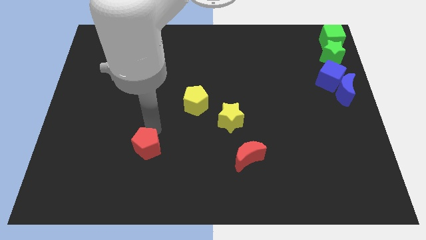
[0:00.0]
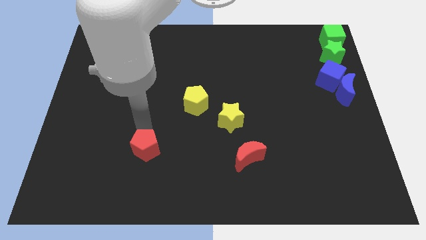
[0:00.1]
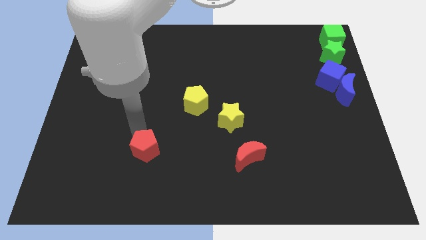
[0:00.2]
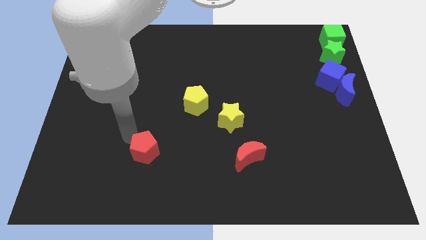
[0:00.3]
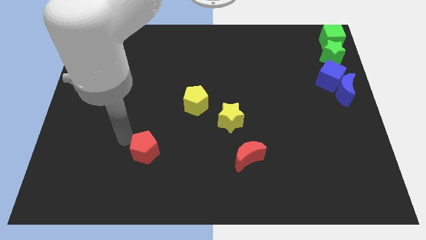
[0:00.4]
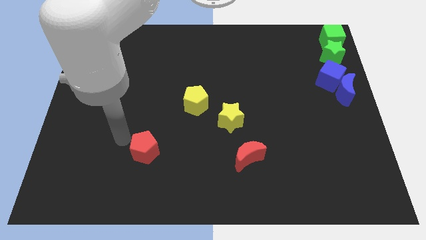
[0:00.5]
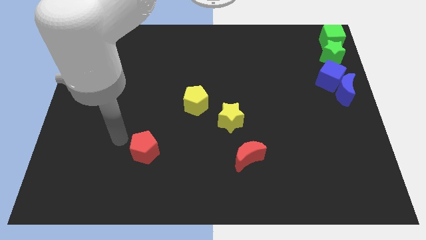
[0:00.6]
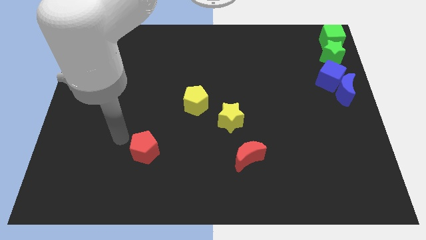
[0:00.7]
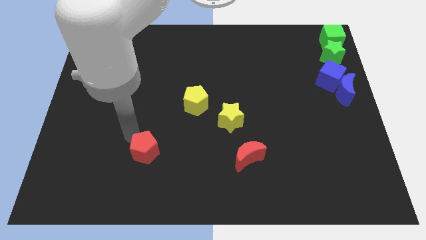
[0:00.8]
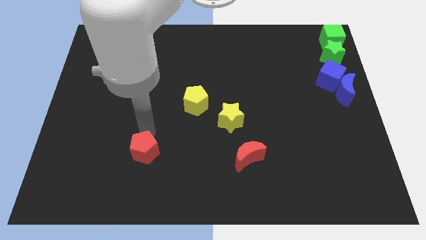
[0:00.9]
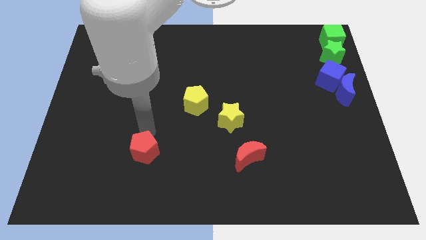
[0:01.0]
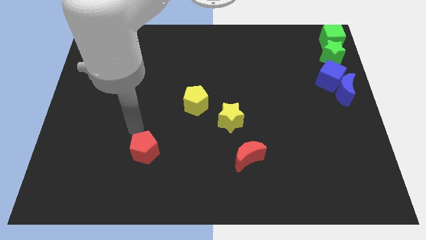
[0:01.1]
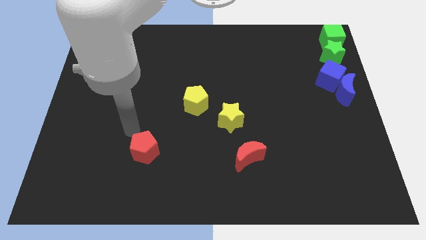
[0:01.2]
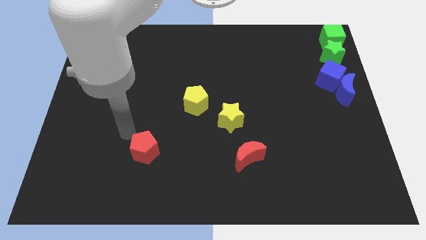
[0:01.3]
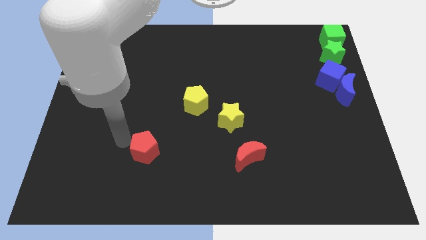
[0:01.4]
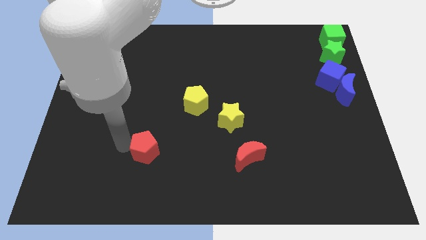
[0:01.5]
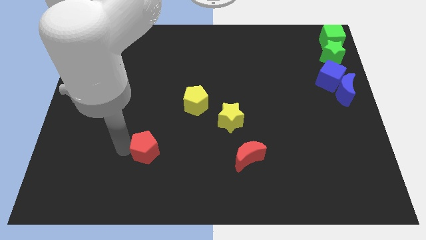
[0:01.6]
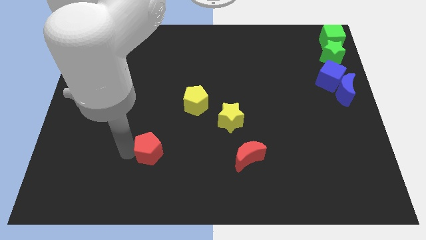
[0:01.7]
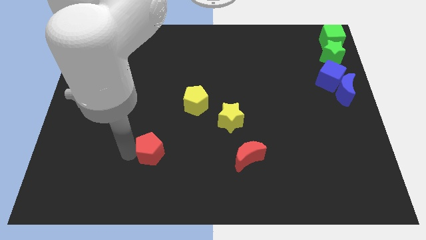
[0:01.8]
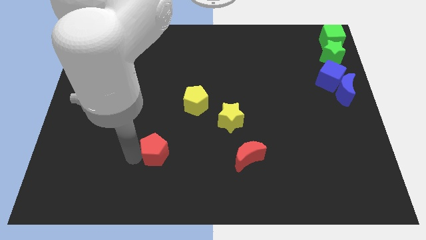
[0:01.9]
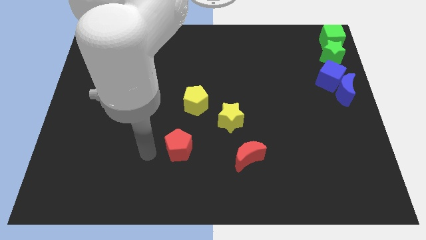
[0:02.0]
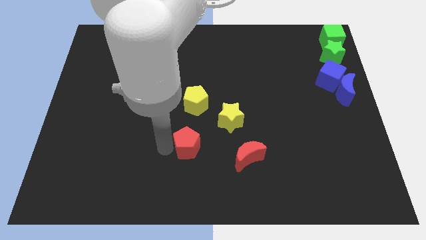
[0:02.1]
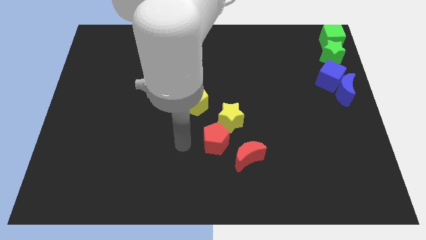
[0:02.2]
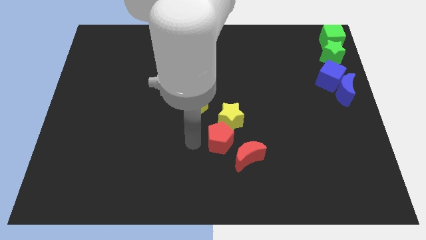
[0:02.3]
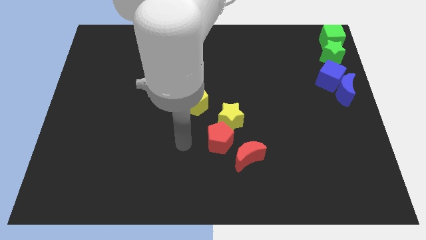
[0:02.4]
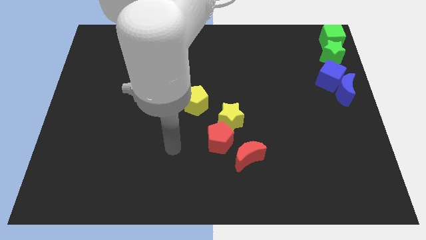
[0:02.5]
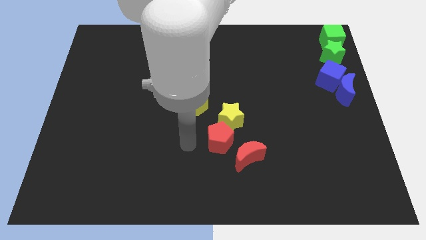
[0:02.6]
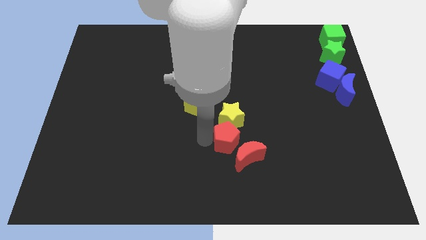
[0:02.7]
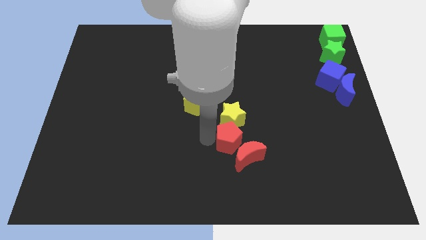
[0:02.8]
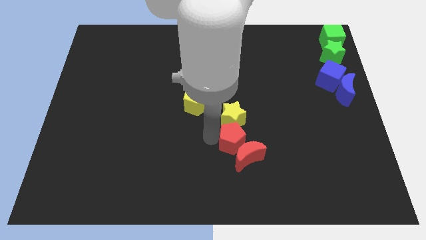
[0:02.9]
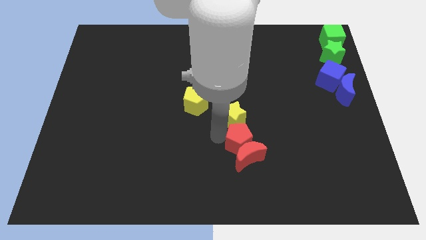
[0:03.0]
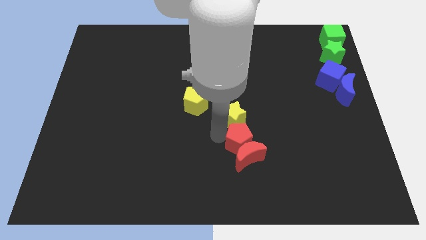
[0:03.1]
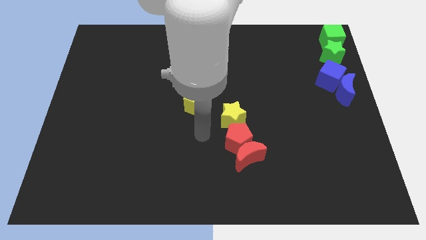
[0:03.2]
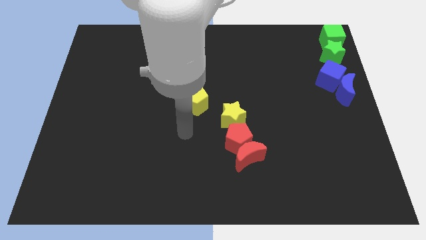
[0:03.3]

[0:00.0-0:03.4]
move the red pentagon diagonally in between the yellow star and red crescent

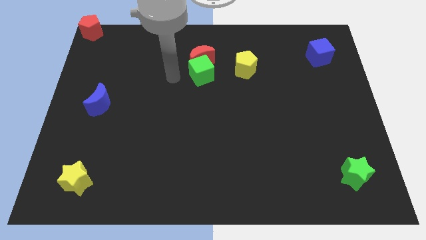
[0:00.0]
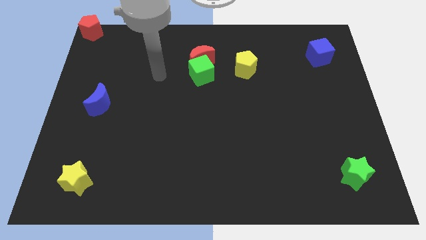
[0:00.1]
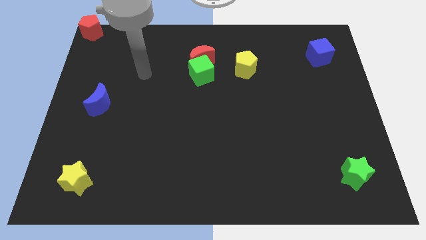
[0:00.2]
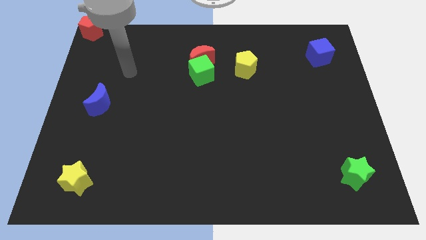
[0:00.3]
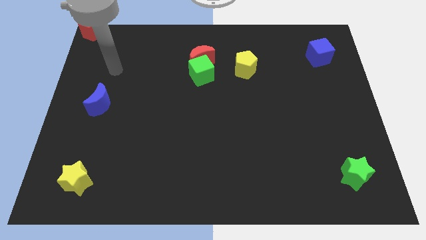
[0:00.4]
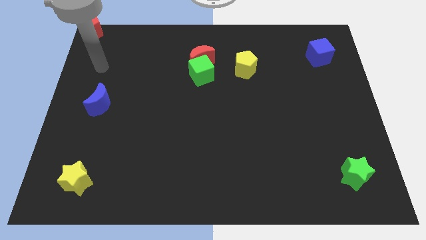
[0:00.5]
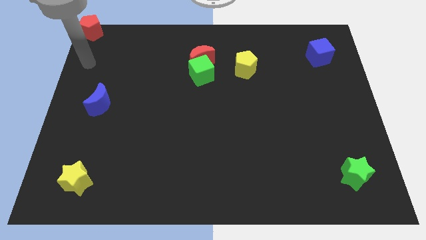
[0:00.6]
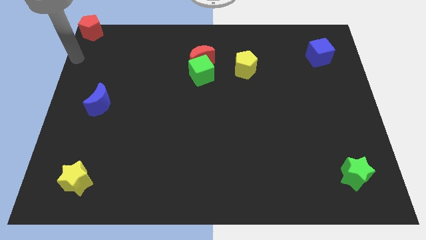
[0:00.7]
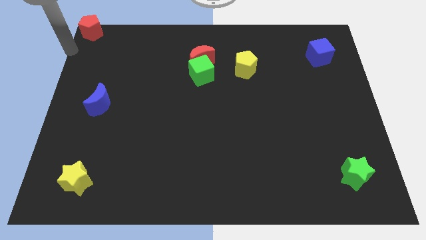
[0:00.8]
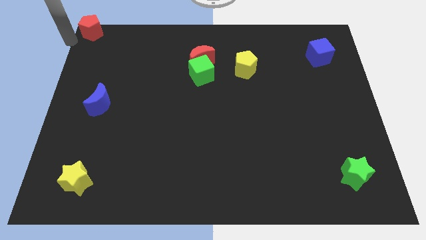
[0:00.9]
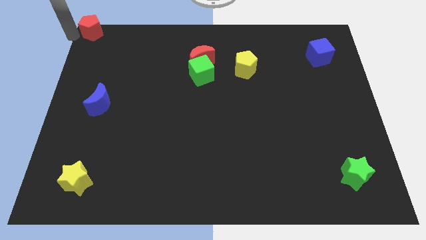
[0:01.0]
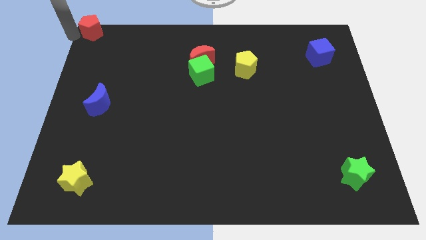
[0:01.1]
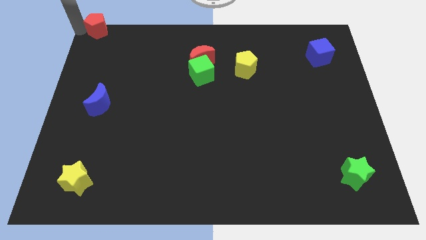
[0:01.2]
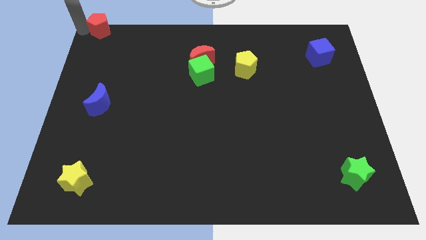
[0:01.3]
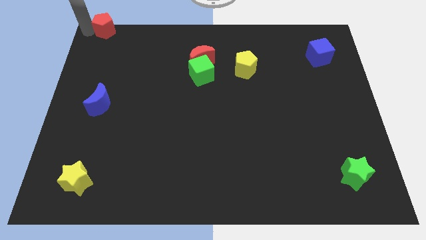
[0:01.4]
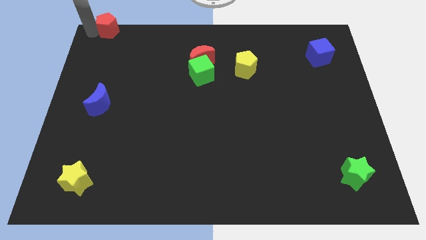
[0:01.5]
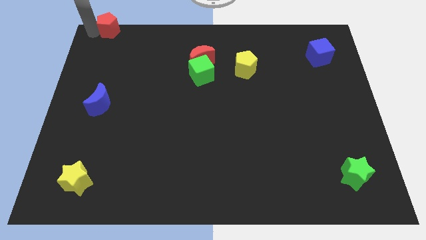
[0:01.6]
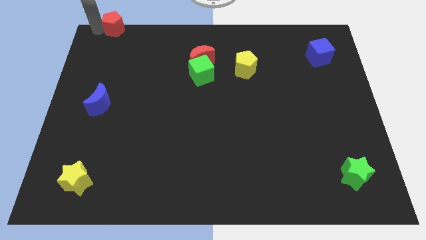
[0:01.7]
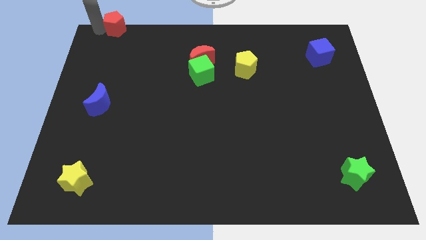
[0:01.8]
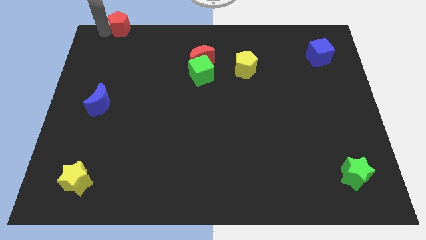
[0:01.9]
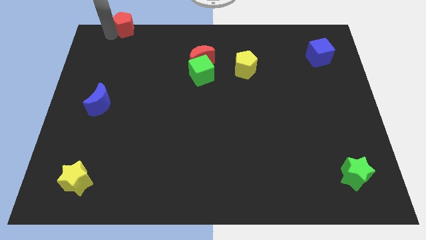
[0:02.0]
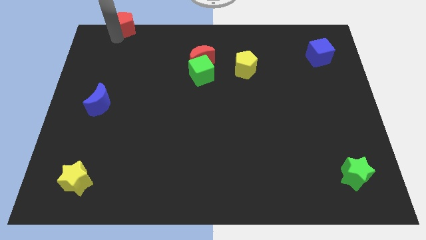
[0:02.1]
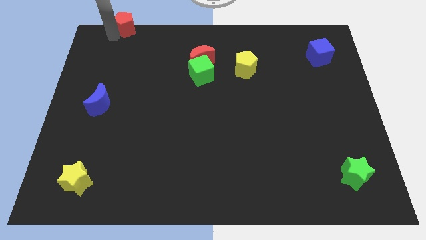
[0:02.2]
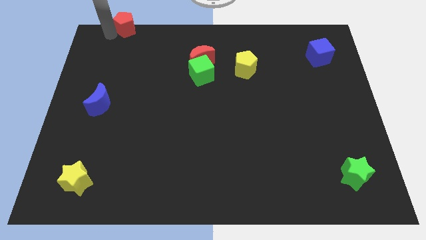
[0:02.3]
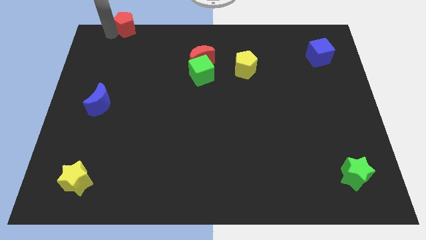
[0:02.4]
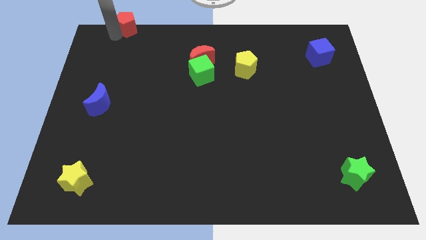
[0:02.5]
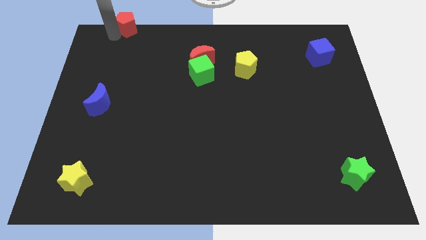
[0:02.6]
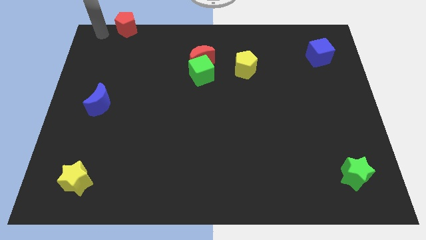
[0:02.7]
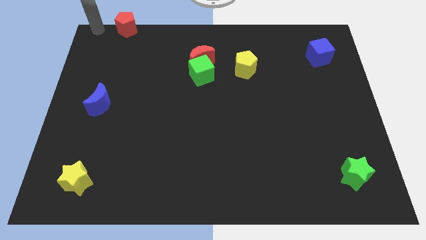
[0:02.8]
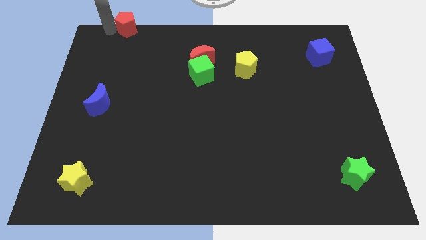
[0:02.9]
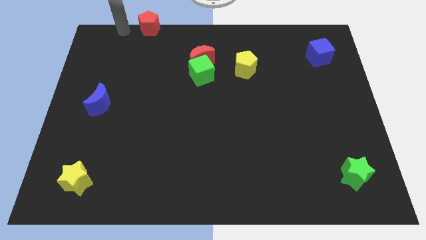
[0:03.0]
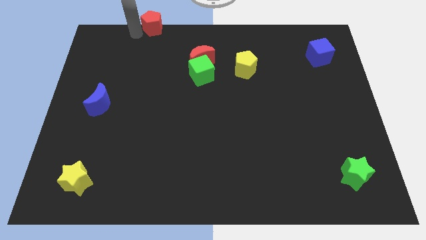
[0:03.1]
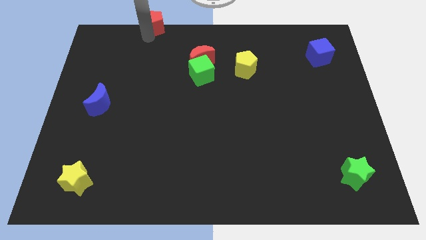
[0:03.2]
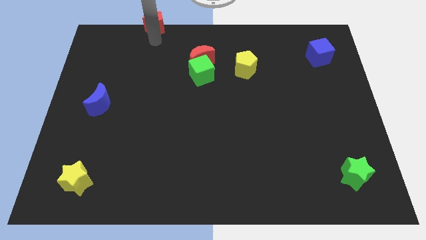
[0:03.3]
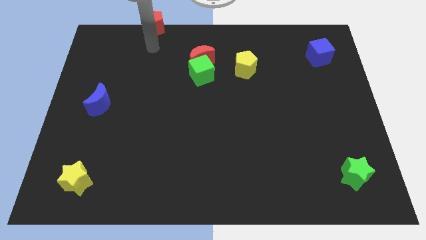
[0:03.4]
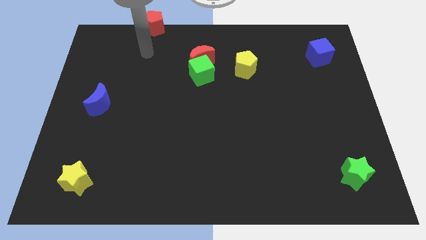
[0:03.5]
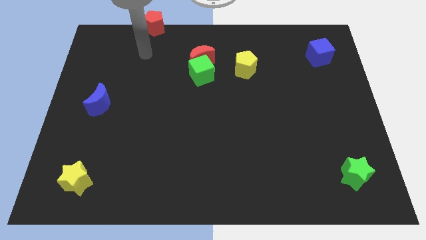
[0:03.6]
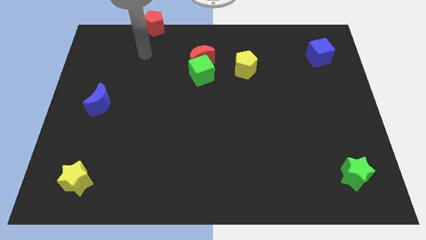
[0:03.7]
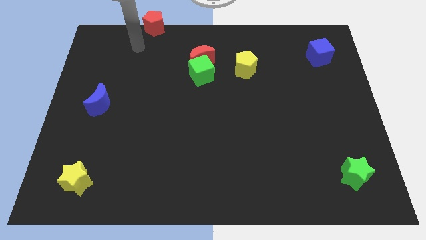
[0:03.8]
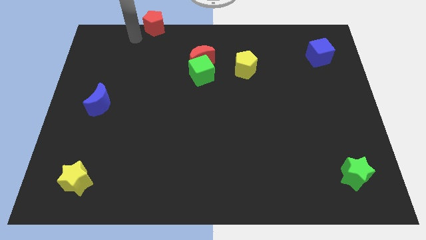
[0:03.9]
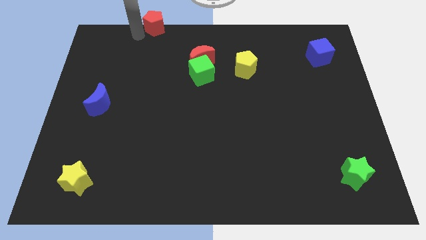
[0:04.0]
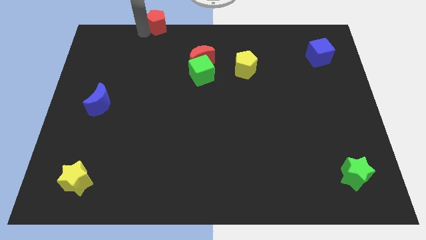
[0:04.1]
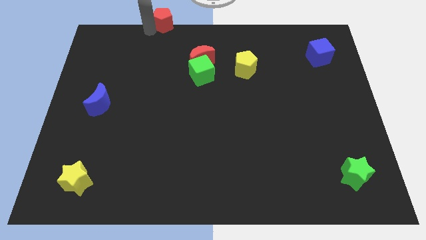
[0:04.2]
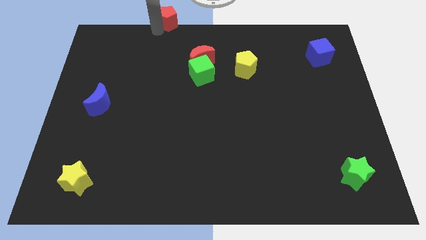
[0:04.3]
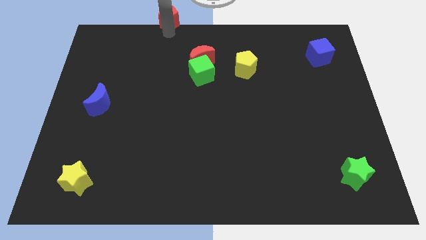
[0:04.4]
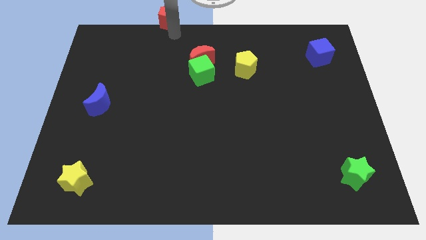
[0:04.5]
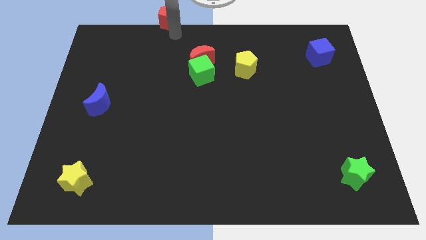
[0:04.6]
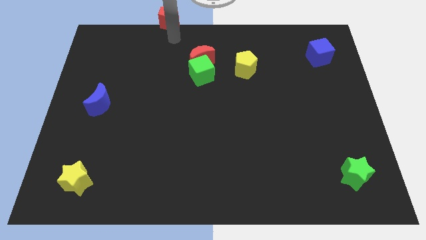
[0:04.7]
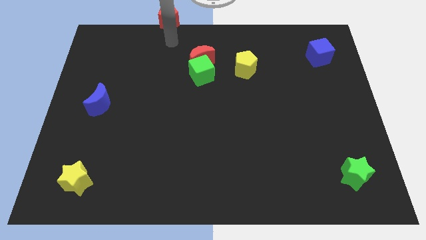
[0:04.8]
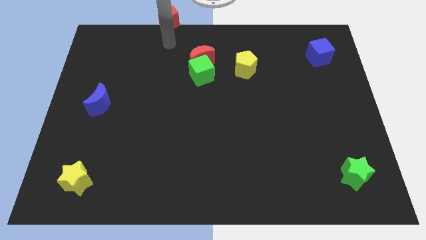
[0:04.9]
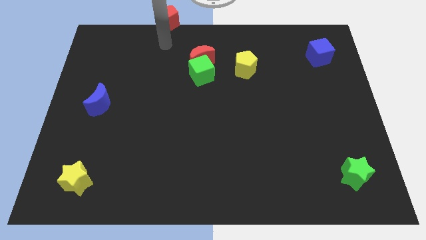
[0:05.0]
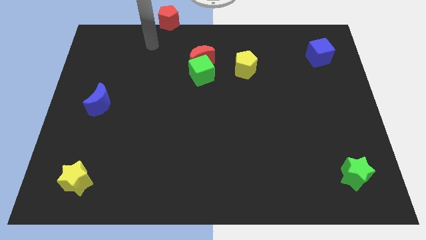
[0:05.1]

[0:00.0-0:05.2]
push the red pentagon towards the right slightly

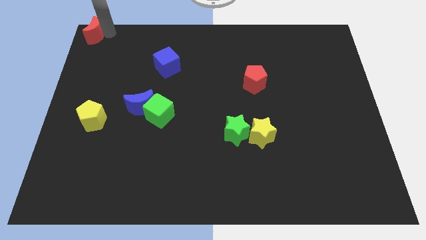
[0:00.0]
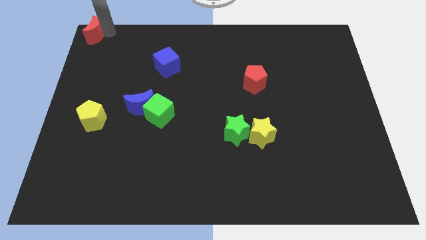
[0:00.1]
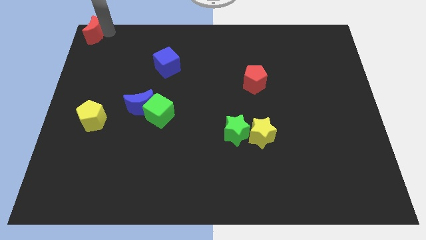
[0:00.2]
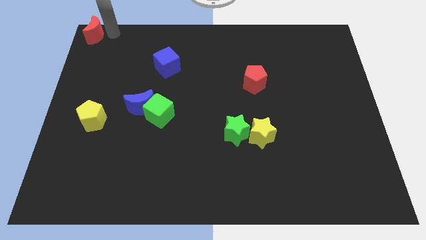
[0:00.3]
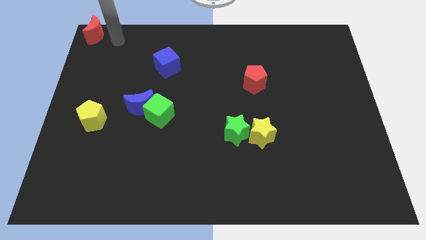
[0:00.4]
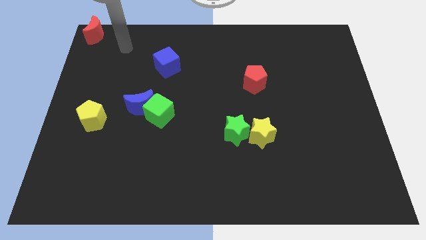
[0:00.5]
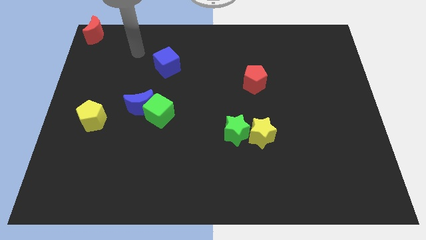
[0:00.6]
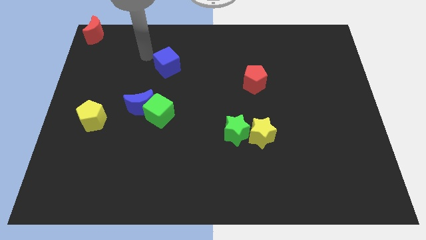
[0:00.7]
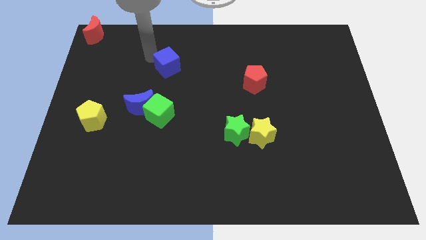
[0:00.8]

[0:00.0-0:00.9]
move the arm away from the red moon
